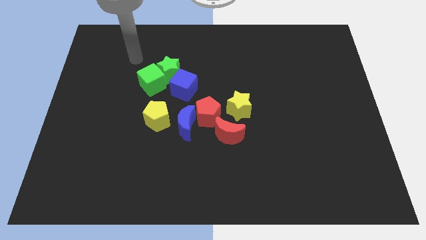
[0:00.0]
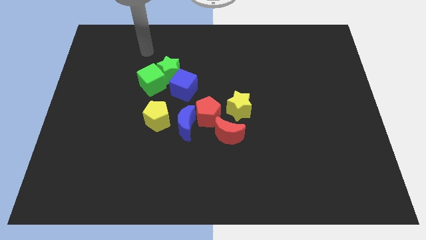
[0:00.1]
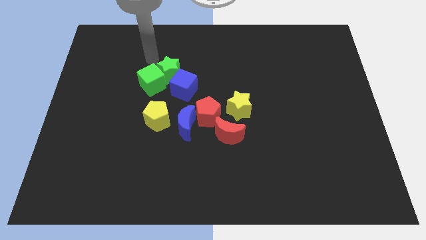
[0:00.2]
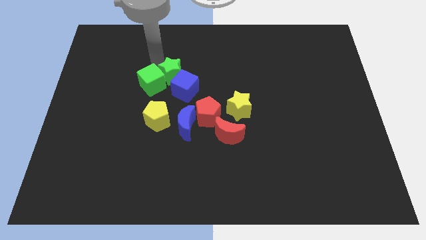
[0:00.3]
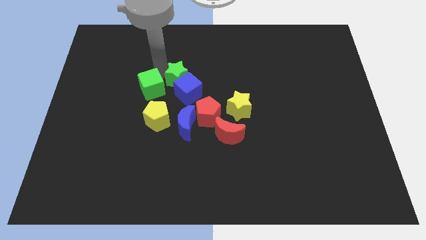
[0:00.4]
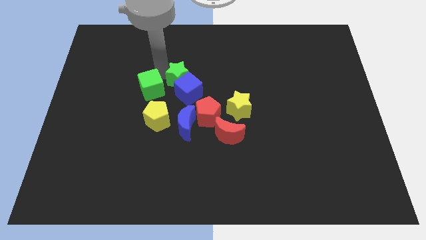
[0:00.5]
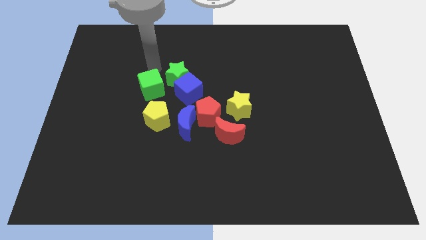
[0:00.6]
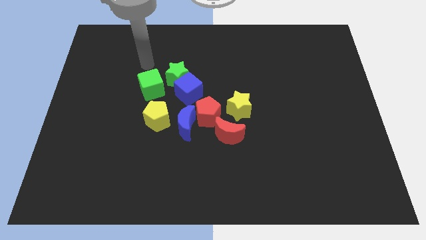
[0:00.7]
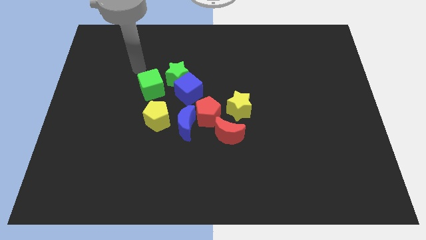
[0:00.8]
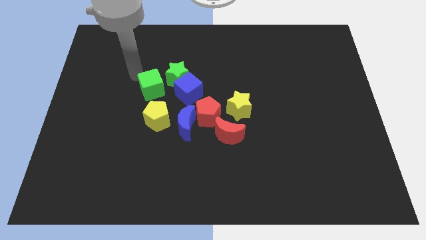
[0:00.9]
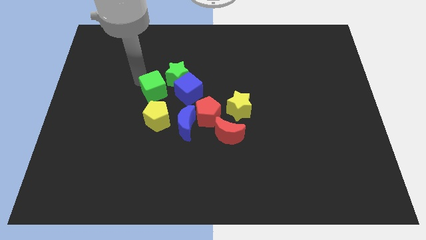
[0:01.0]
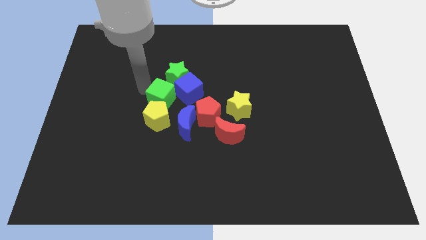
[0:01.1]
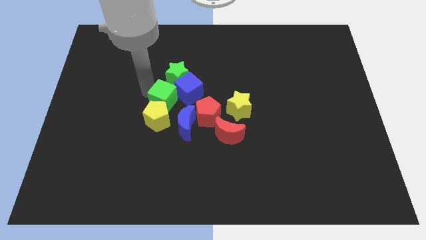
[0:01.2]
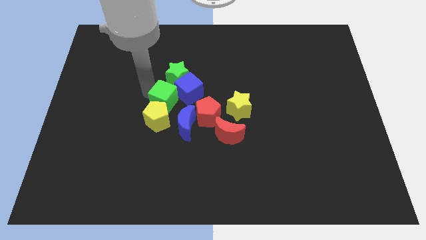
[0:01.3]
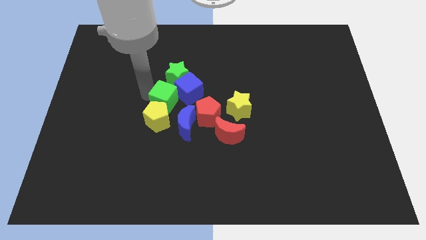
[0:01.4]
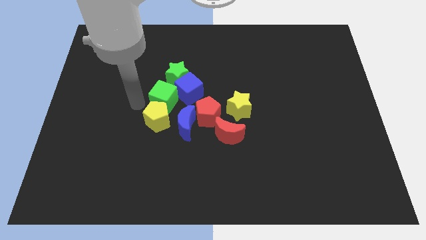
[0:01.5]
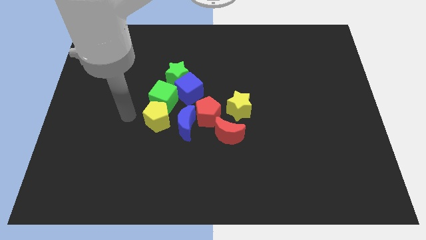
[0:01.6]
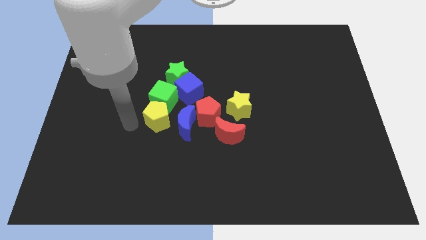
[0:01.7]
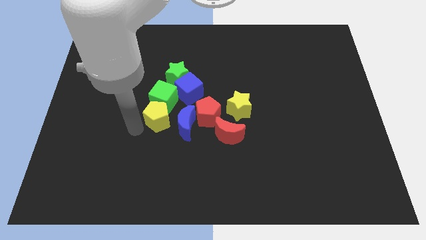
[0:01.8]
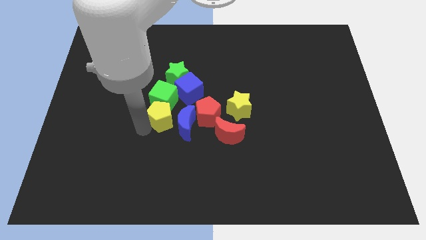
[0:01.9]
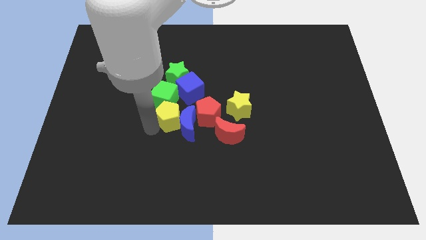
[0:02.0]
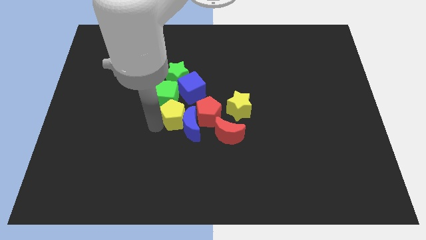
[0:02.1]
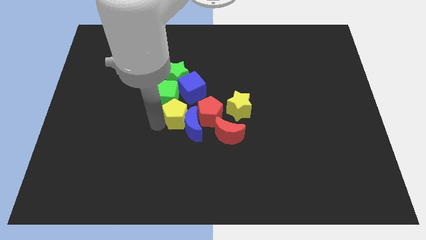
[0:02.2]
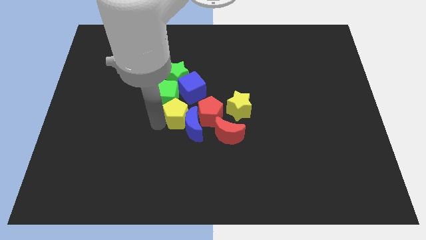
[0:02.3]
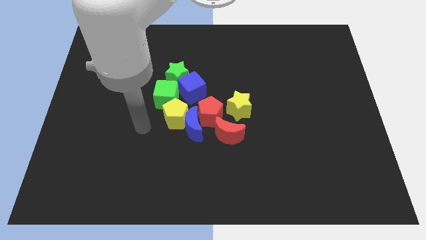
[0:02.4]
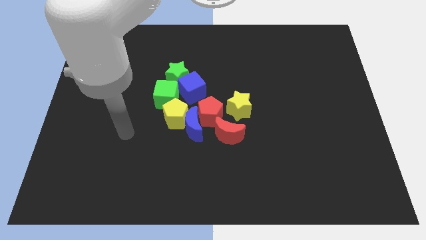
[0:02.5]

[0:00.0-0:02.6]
put the yellow pentagon into the blue semicircle

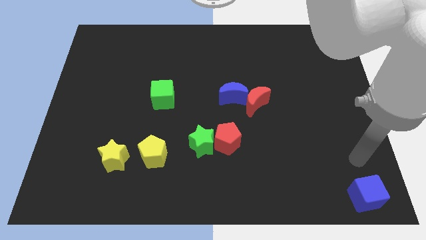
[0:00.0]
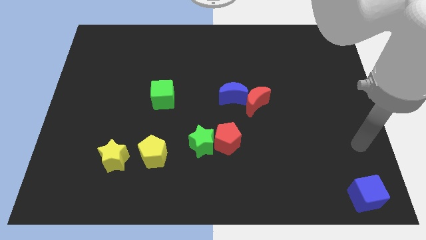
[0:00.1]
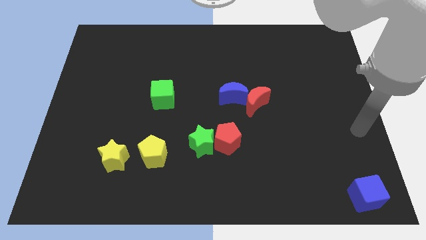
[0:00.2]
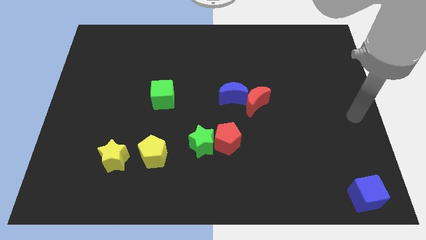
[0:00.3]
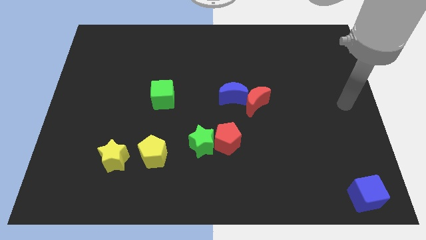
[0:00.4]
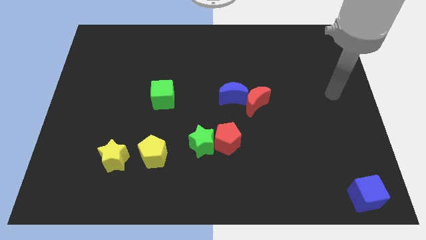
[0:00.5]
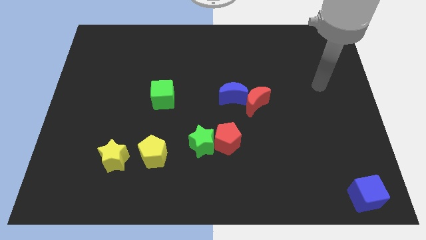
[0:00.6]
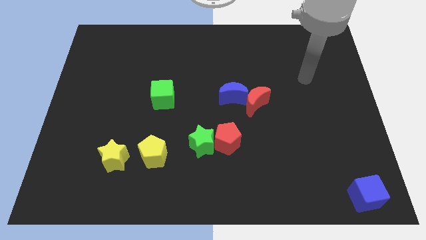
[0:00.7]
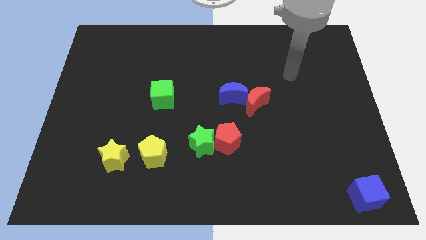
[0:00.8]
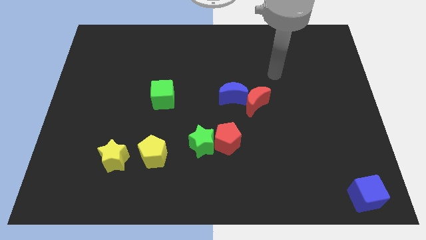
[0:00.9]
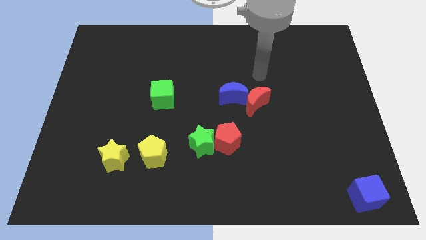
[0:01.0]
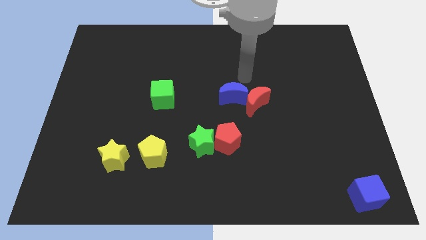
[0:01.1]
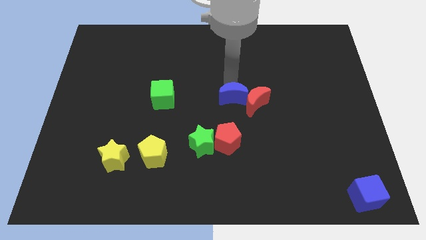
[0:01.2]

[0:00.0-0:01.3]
point your arm at the top of the blue crescent

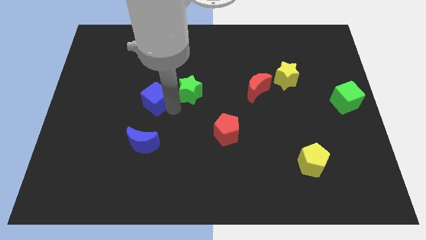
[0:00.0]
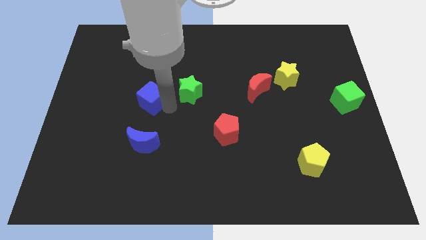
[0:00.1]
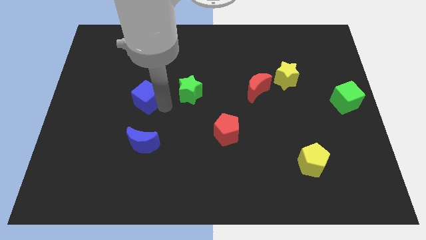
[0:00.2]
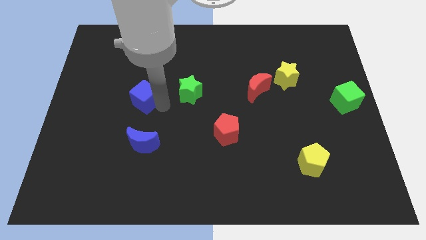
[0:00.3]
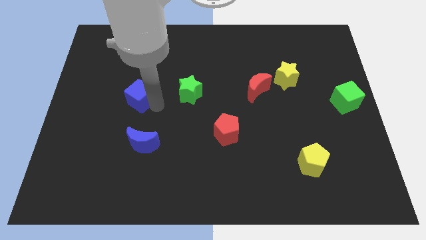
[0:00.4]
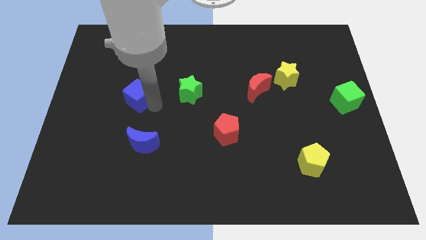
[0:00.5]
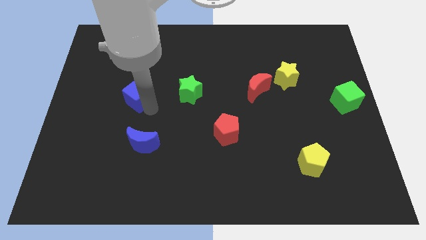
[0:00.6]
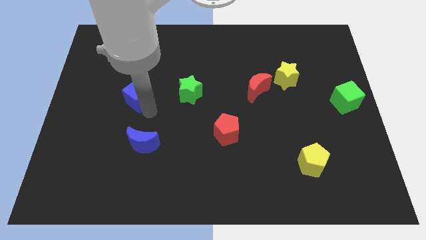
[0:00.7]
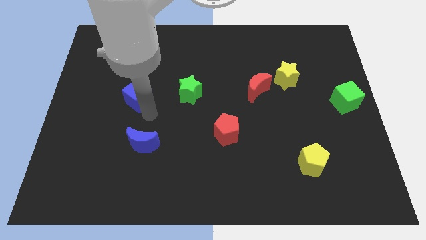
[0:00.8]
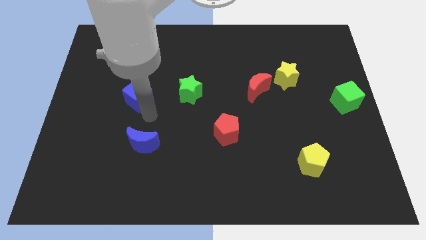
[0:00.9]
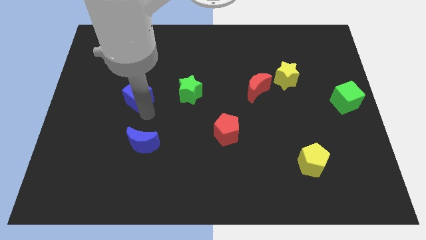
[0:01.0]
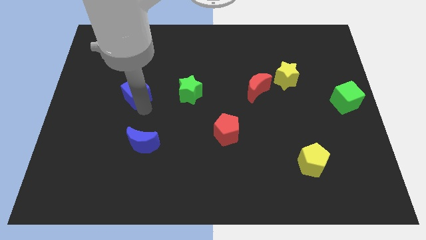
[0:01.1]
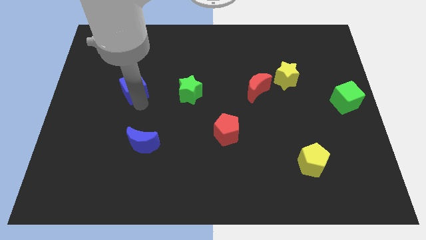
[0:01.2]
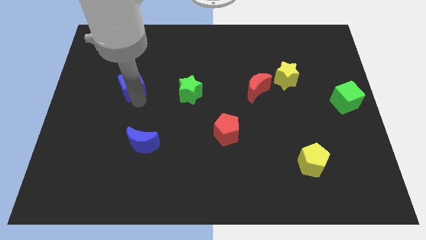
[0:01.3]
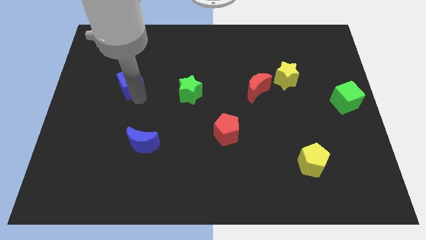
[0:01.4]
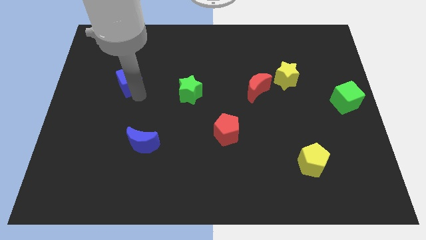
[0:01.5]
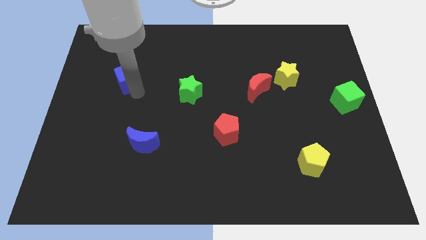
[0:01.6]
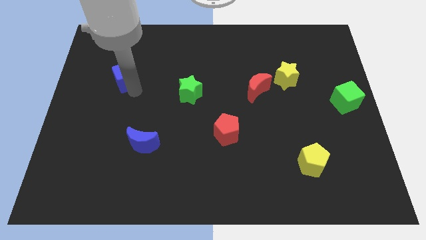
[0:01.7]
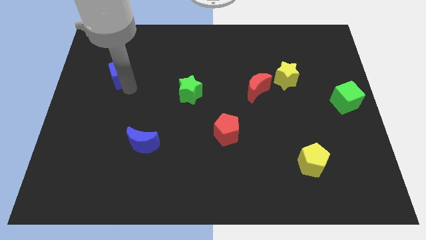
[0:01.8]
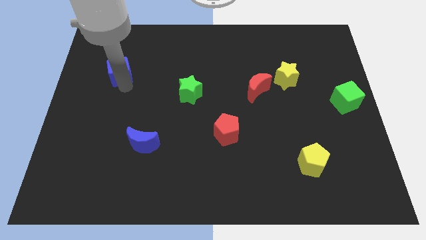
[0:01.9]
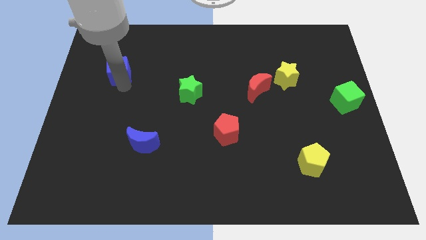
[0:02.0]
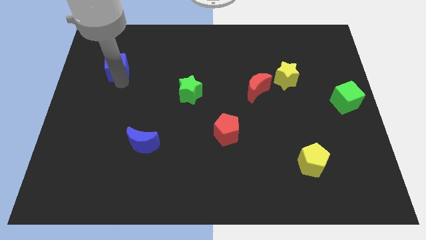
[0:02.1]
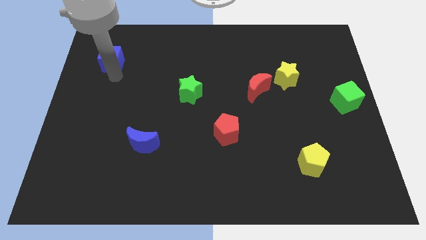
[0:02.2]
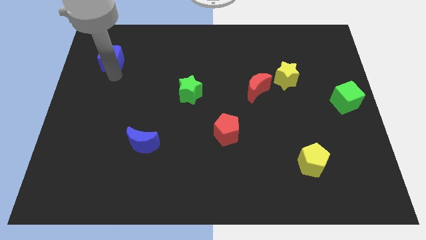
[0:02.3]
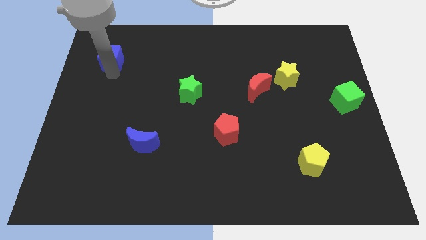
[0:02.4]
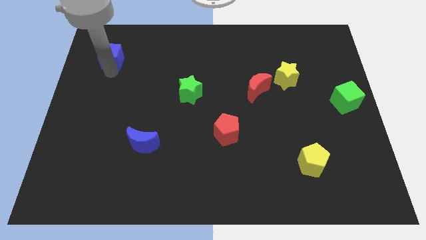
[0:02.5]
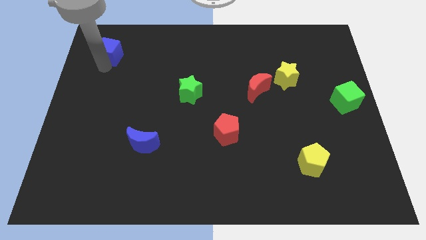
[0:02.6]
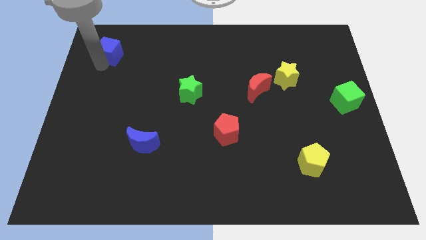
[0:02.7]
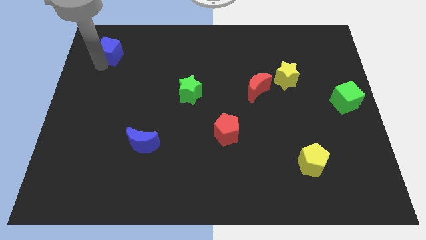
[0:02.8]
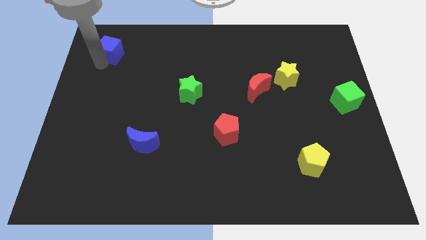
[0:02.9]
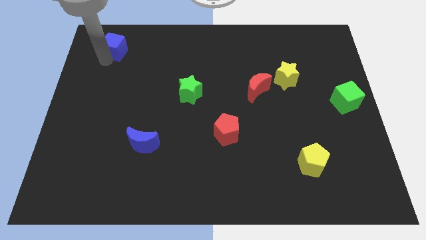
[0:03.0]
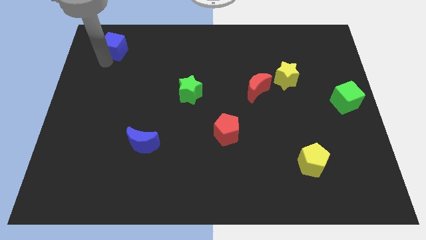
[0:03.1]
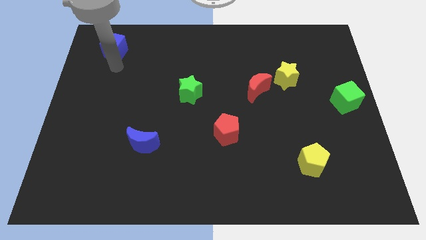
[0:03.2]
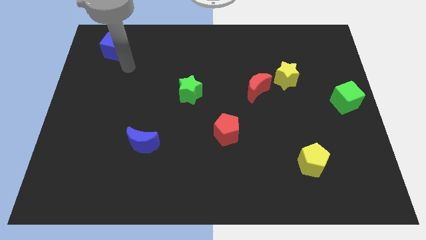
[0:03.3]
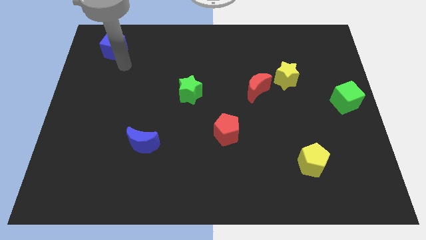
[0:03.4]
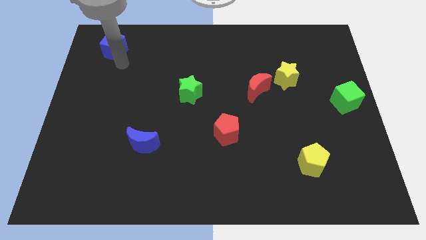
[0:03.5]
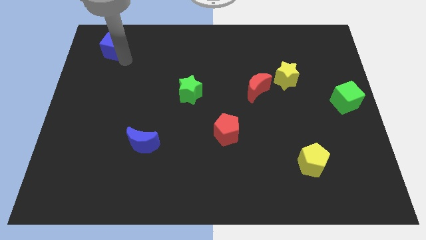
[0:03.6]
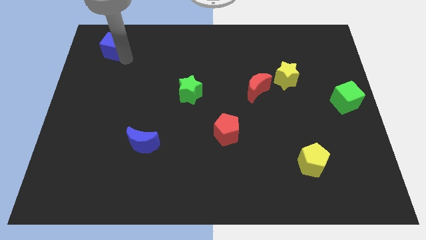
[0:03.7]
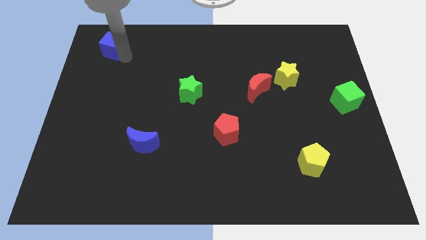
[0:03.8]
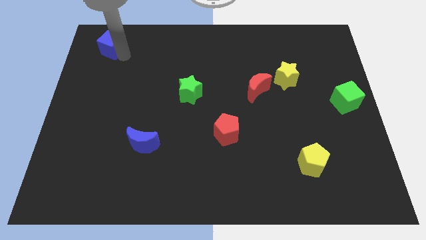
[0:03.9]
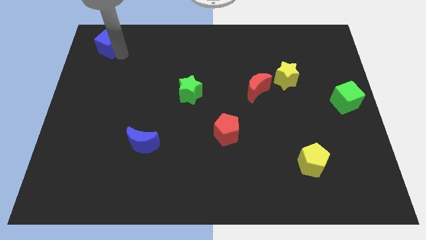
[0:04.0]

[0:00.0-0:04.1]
push blue cube towards top left

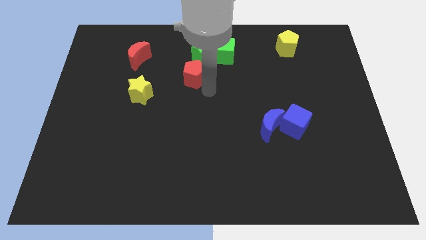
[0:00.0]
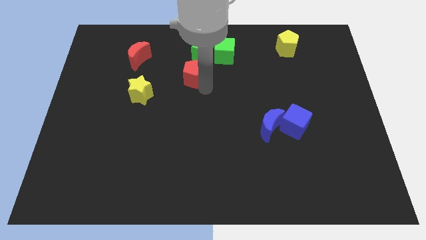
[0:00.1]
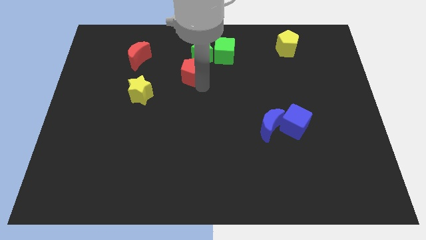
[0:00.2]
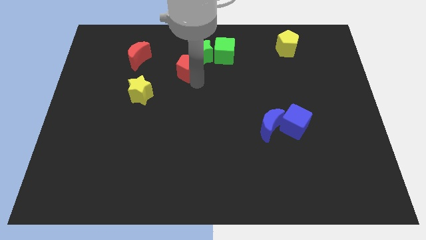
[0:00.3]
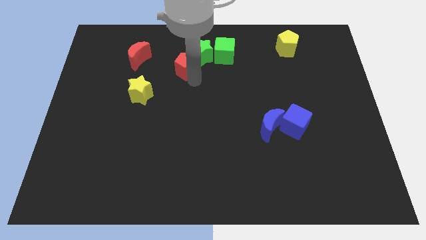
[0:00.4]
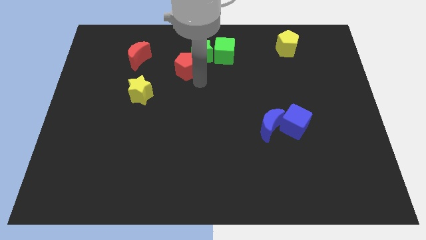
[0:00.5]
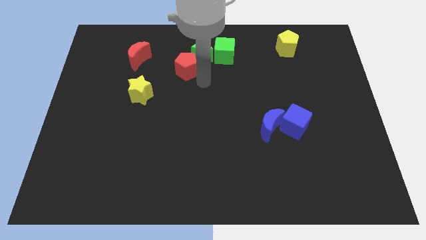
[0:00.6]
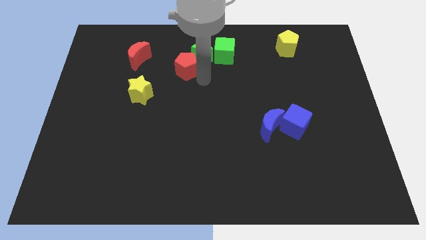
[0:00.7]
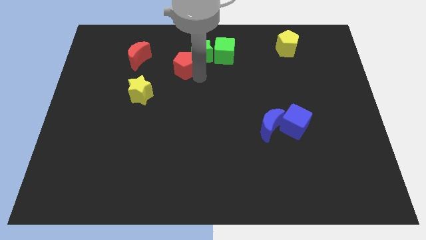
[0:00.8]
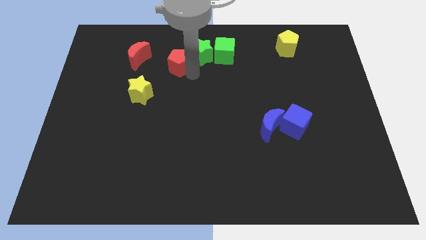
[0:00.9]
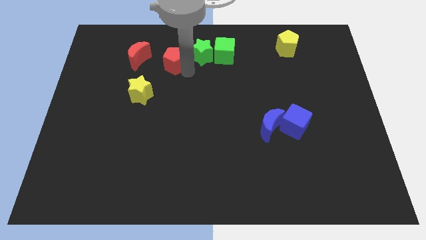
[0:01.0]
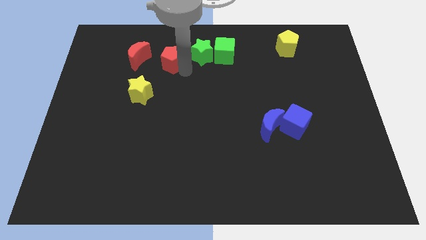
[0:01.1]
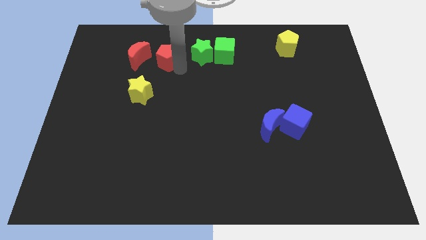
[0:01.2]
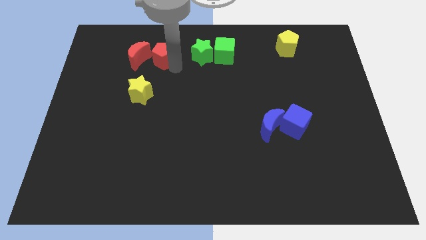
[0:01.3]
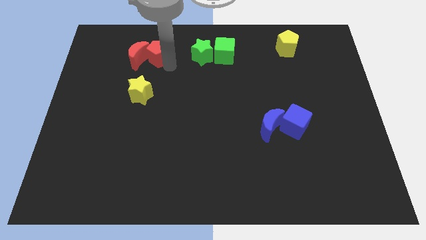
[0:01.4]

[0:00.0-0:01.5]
push the red pentagon into the right side of the red crescent
